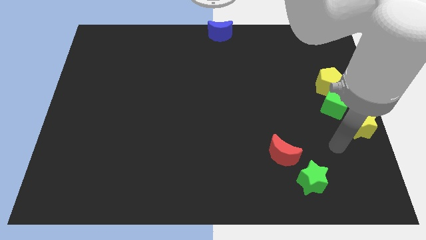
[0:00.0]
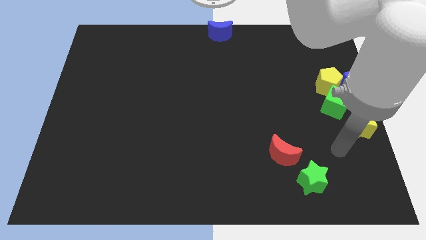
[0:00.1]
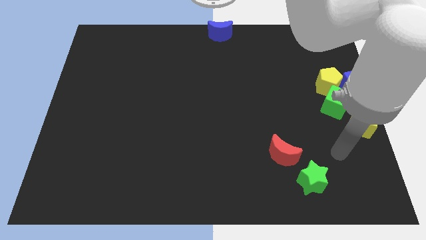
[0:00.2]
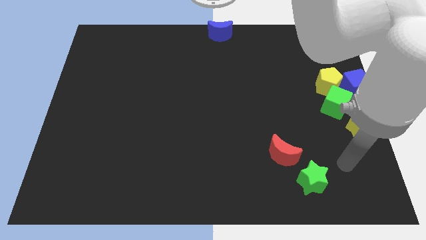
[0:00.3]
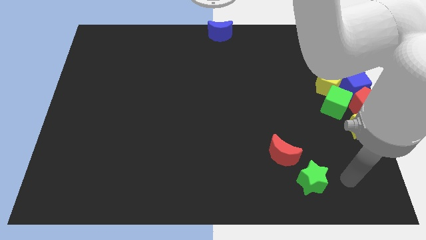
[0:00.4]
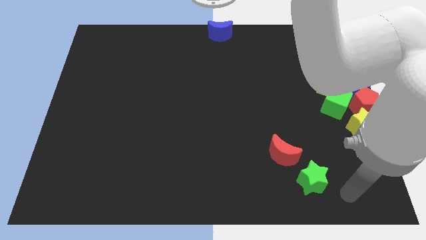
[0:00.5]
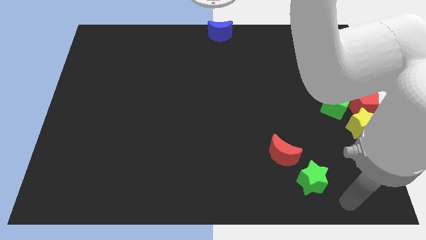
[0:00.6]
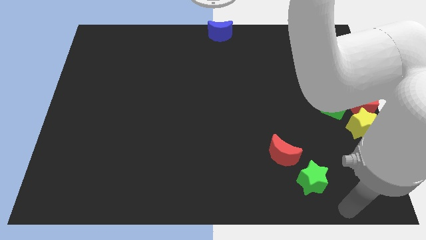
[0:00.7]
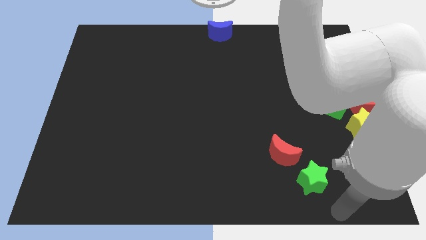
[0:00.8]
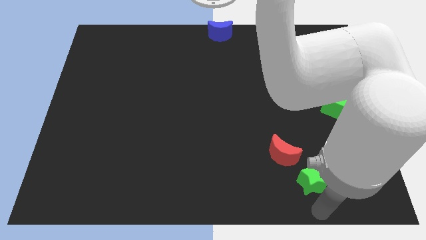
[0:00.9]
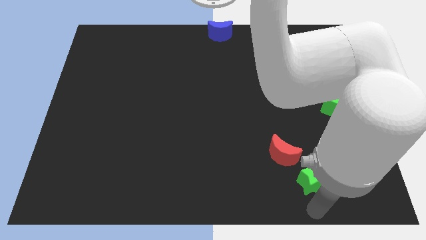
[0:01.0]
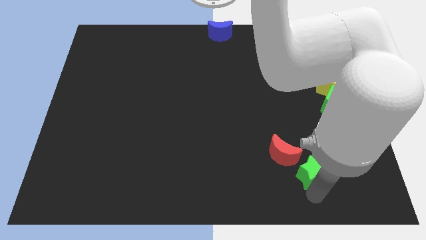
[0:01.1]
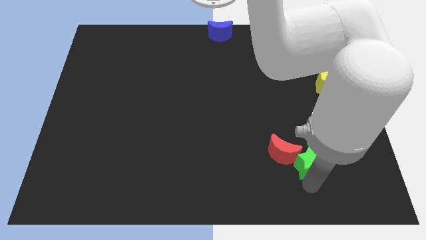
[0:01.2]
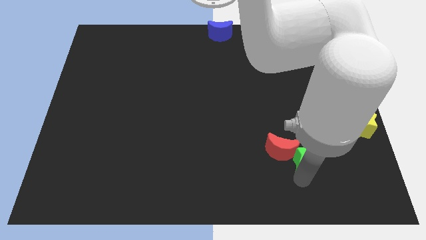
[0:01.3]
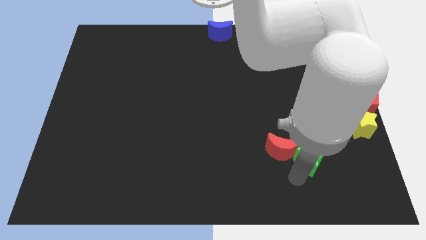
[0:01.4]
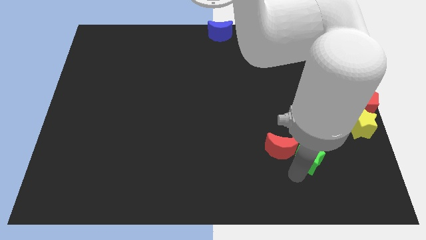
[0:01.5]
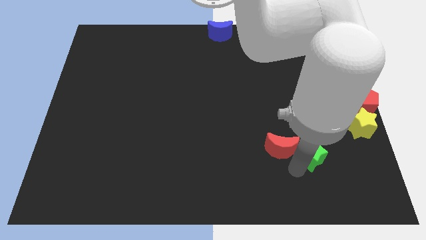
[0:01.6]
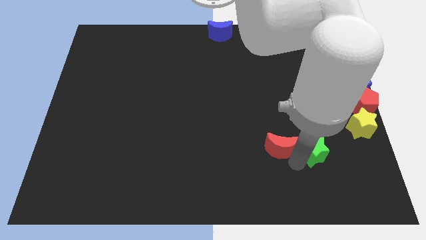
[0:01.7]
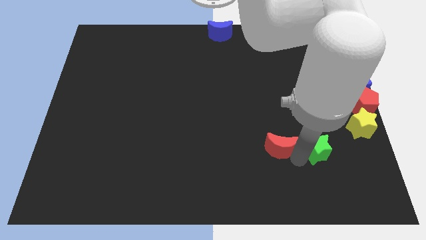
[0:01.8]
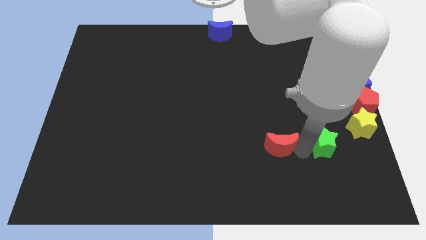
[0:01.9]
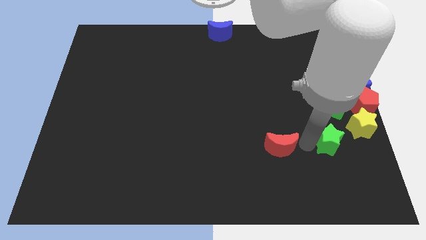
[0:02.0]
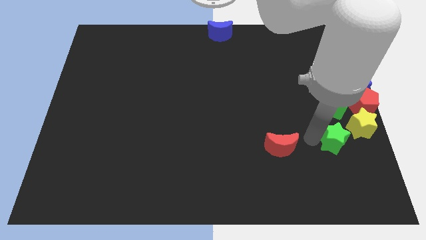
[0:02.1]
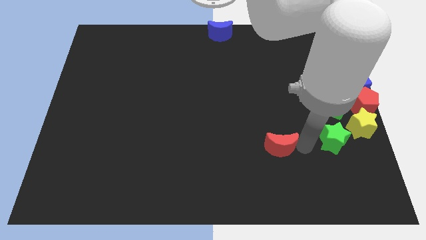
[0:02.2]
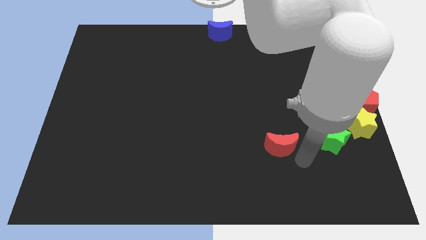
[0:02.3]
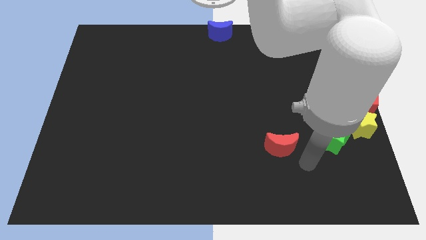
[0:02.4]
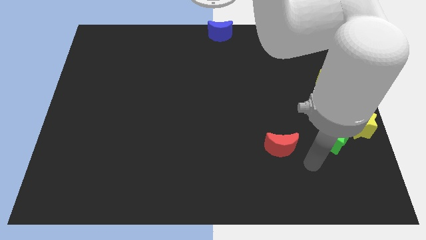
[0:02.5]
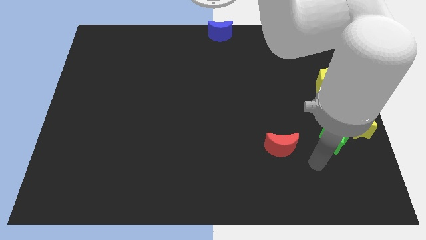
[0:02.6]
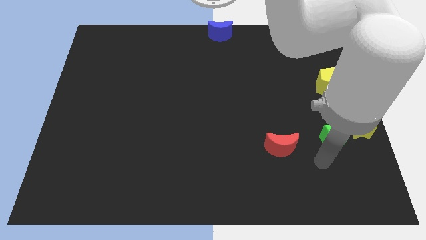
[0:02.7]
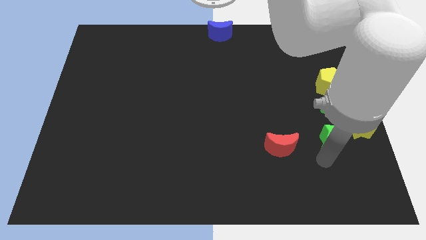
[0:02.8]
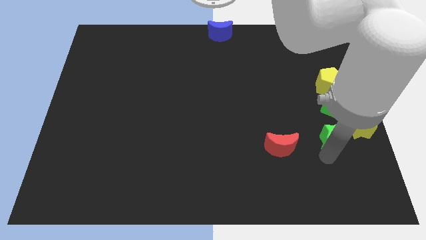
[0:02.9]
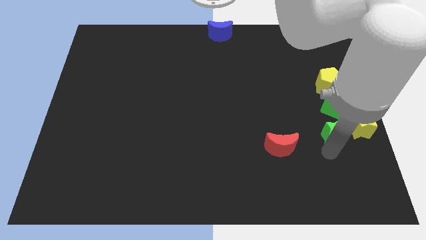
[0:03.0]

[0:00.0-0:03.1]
place green star below the green cube

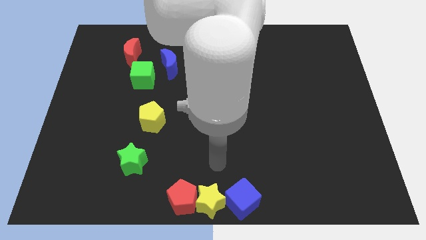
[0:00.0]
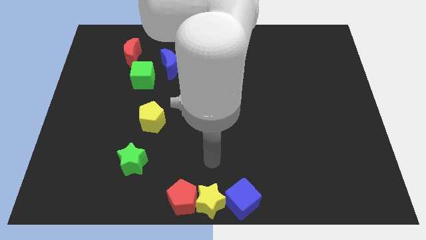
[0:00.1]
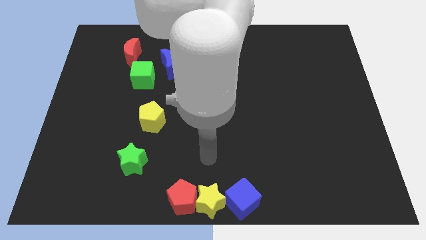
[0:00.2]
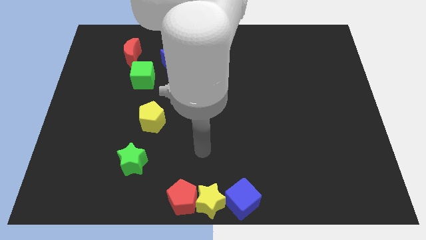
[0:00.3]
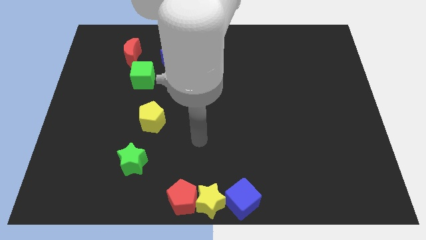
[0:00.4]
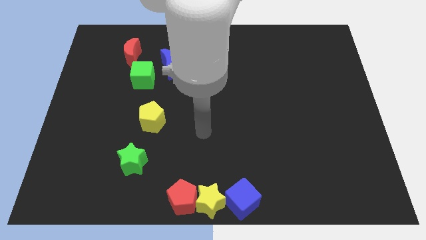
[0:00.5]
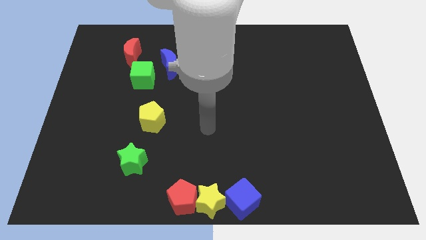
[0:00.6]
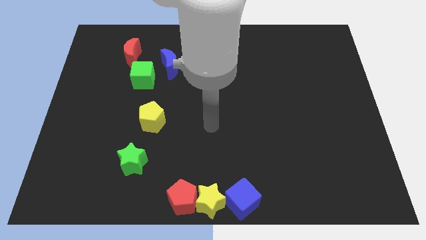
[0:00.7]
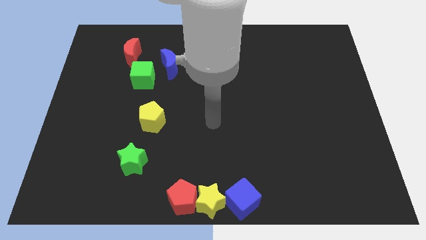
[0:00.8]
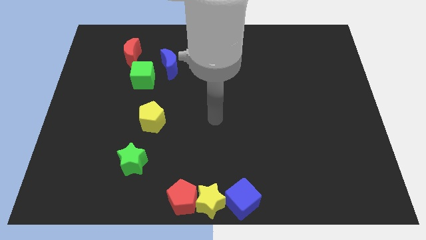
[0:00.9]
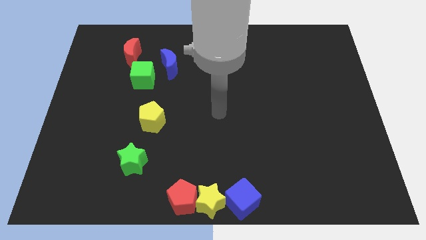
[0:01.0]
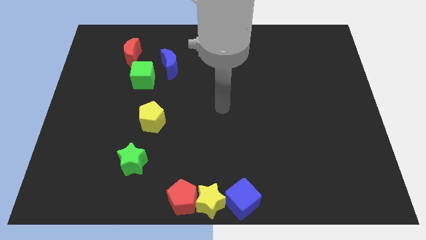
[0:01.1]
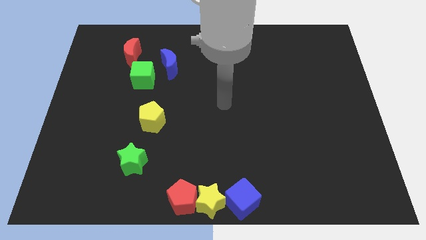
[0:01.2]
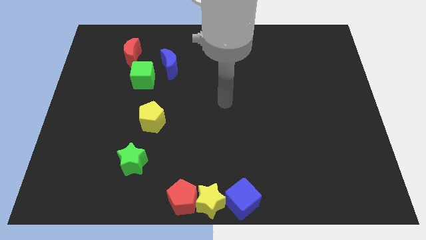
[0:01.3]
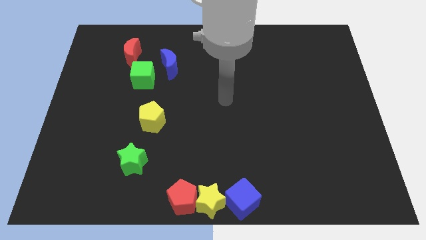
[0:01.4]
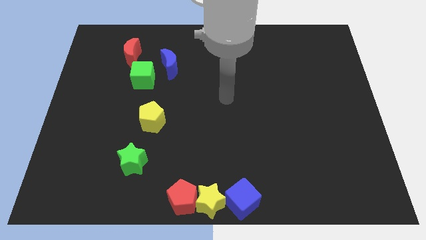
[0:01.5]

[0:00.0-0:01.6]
move arm in the center

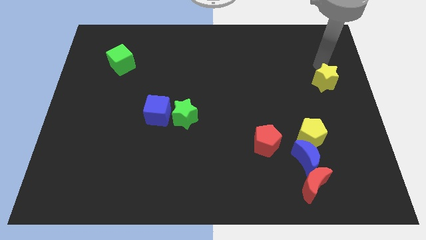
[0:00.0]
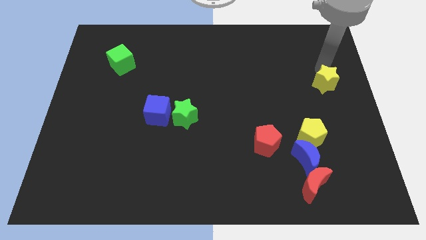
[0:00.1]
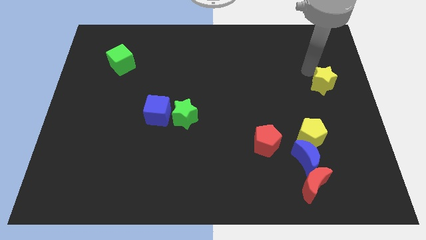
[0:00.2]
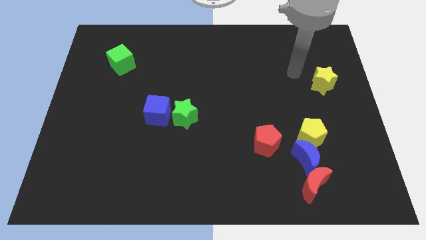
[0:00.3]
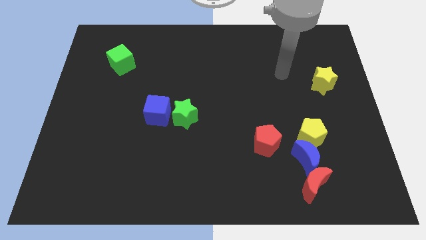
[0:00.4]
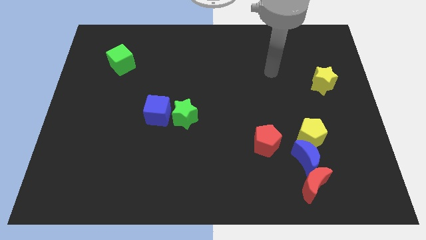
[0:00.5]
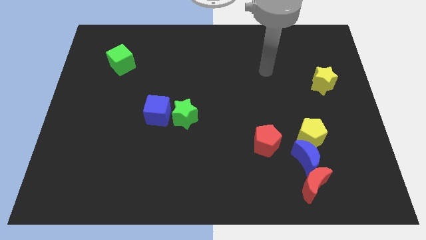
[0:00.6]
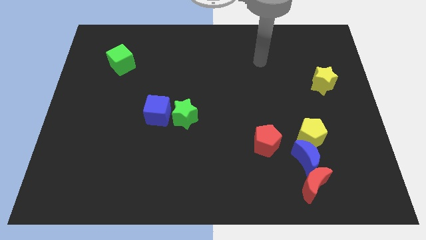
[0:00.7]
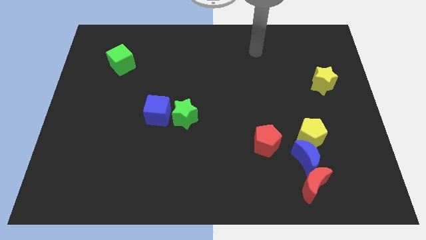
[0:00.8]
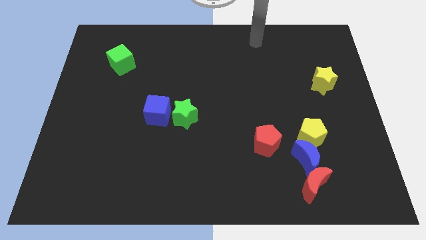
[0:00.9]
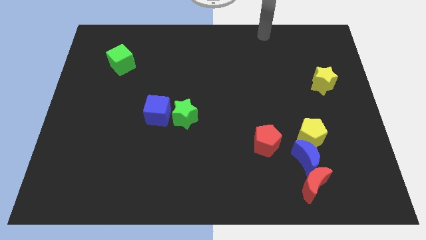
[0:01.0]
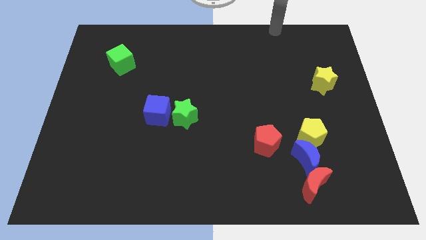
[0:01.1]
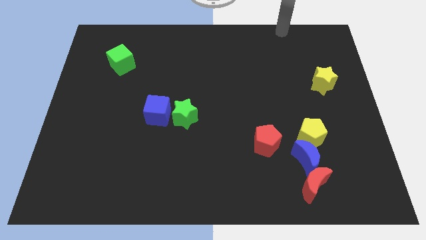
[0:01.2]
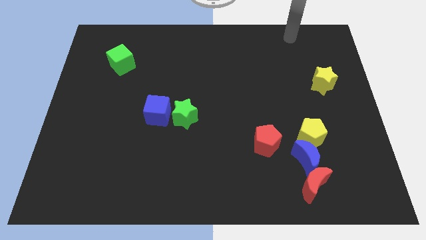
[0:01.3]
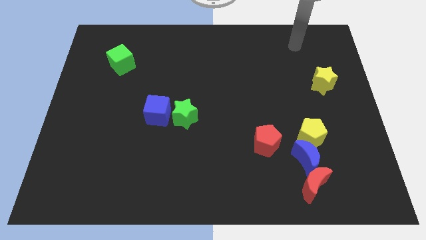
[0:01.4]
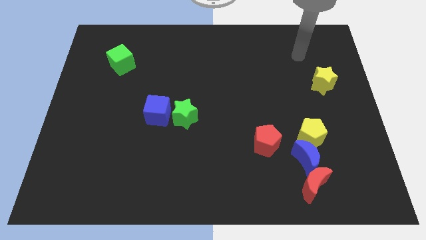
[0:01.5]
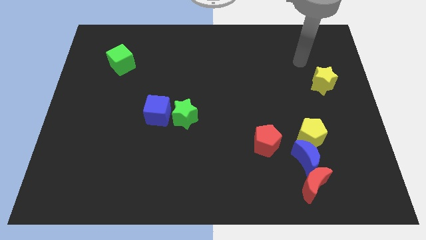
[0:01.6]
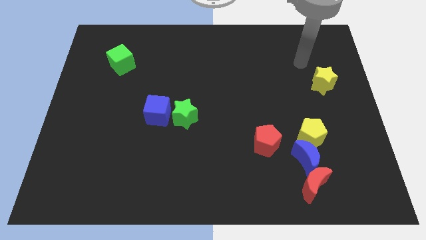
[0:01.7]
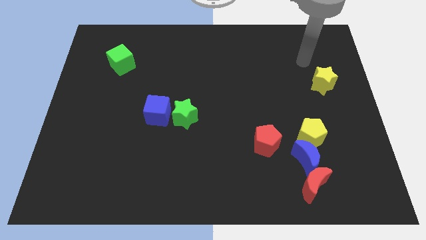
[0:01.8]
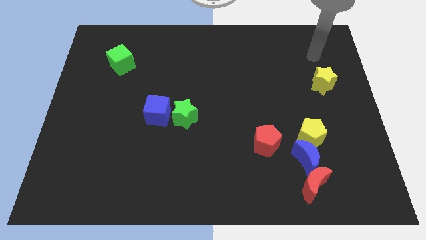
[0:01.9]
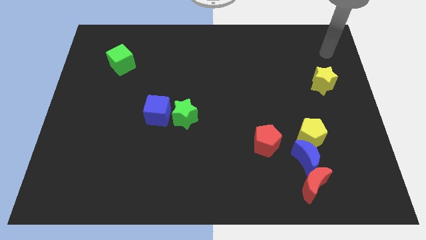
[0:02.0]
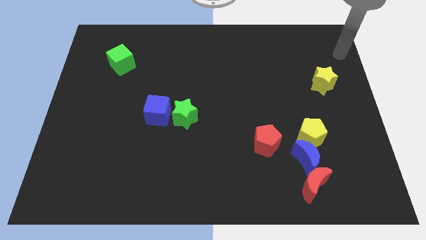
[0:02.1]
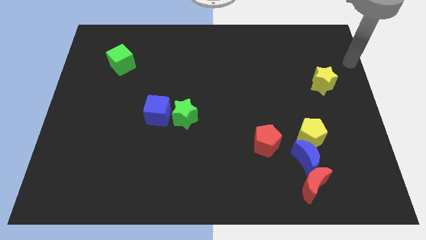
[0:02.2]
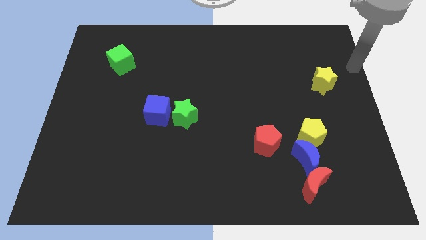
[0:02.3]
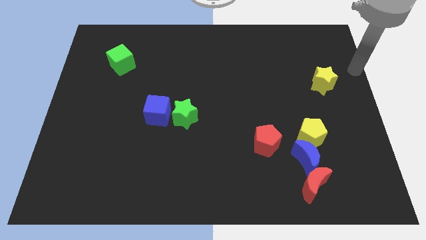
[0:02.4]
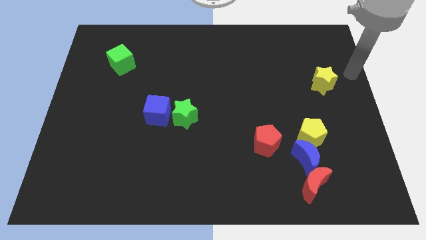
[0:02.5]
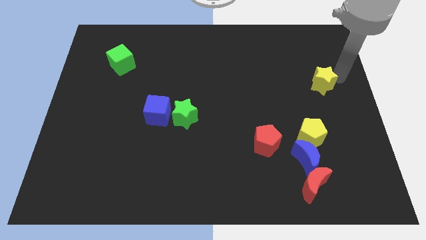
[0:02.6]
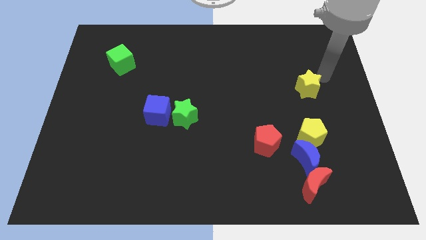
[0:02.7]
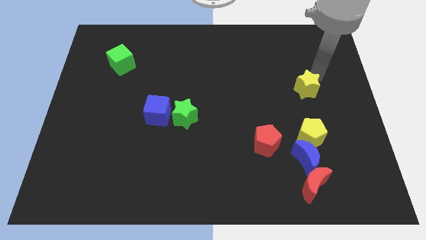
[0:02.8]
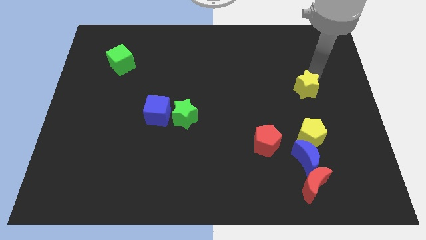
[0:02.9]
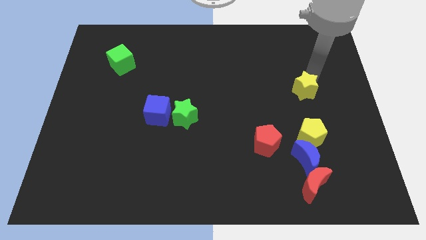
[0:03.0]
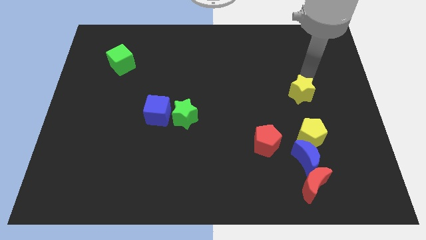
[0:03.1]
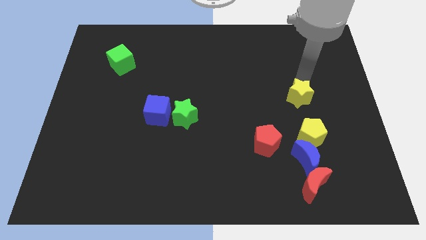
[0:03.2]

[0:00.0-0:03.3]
place the yellow star vertically above the yellow pentagon

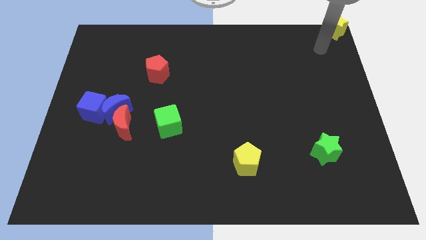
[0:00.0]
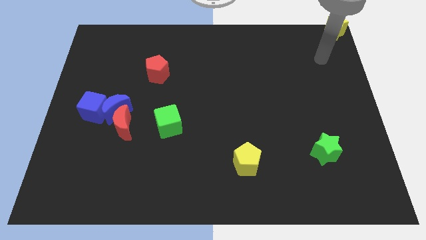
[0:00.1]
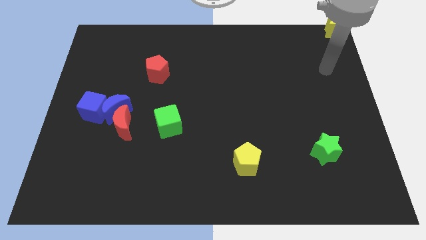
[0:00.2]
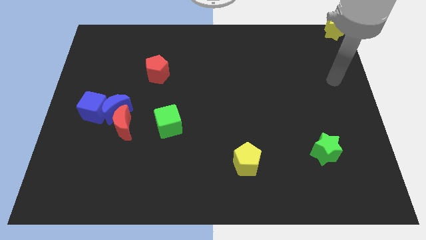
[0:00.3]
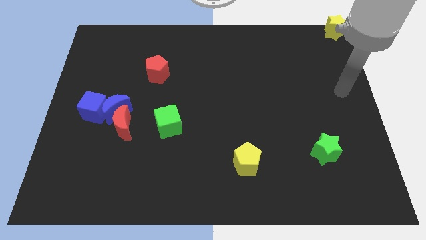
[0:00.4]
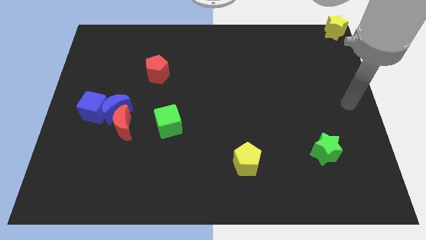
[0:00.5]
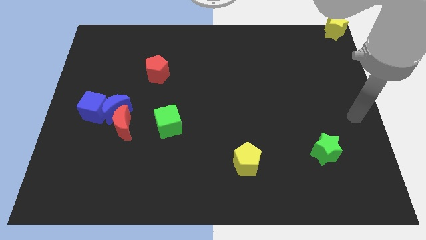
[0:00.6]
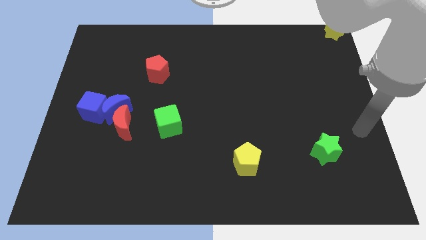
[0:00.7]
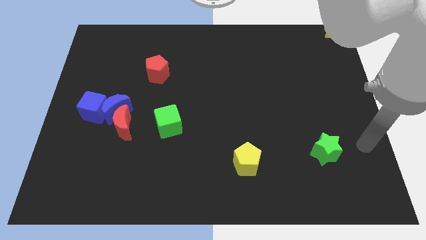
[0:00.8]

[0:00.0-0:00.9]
move your arm to the right of the green star
